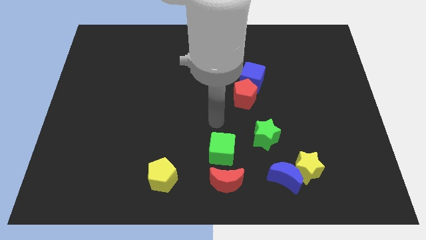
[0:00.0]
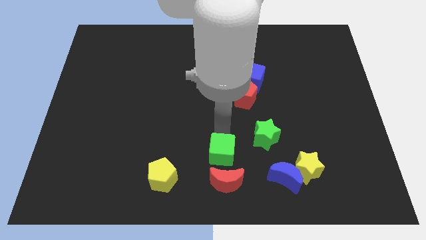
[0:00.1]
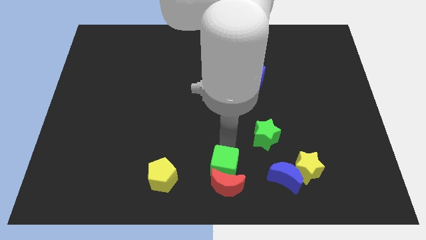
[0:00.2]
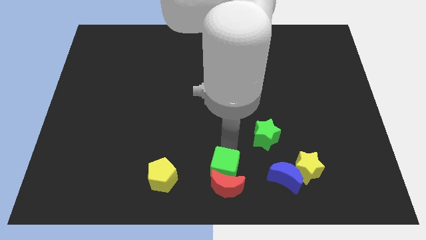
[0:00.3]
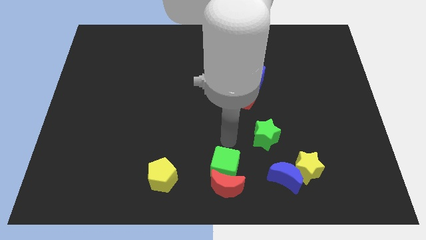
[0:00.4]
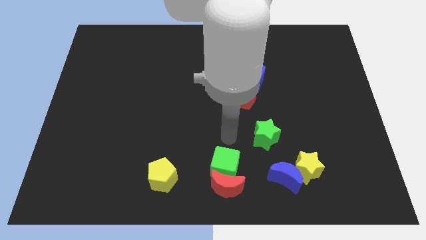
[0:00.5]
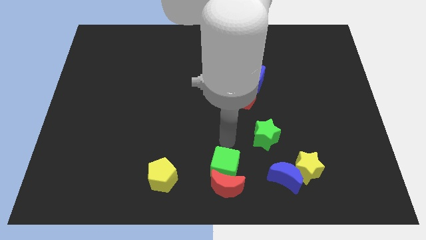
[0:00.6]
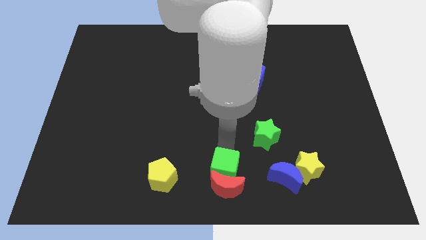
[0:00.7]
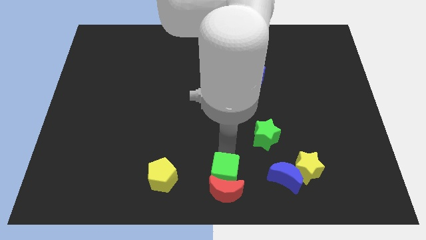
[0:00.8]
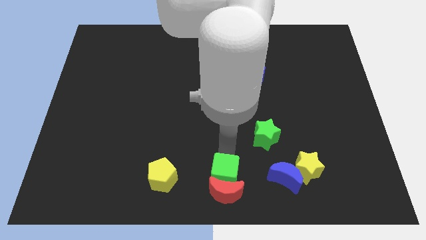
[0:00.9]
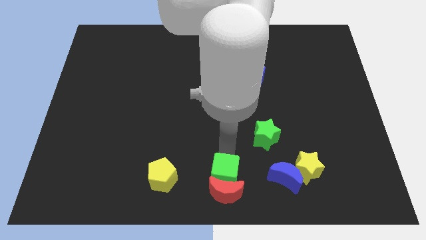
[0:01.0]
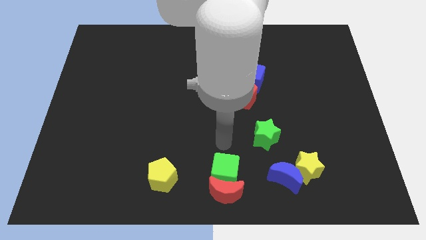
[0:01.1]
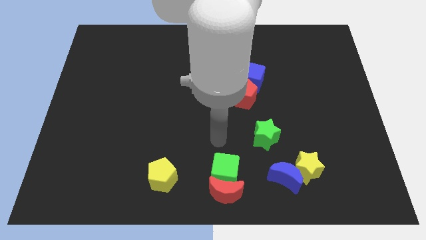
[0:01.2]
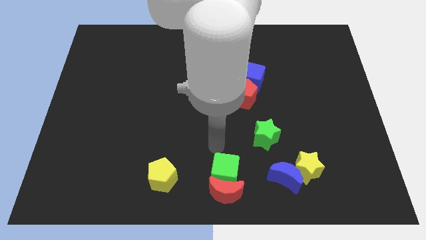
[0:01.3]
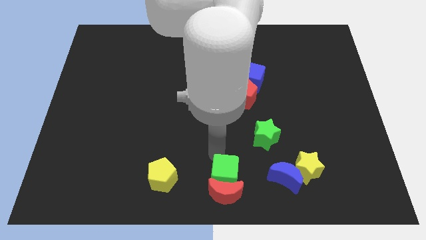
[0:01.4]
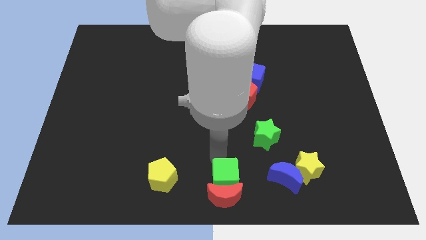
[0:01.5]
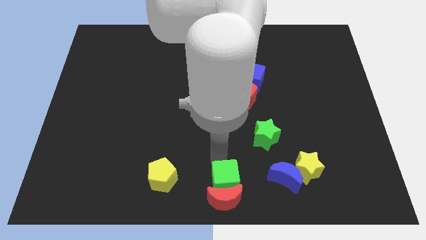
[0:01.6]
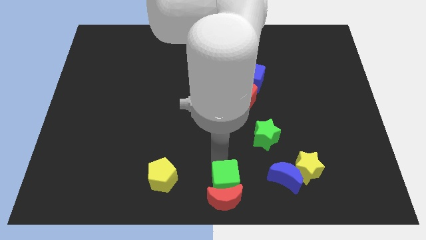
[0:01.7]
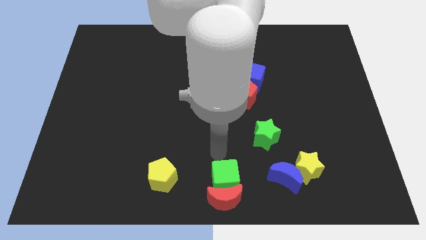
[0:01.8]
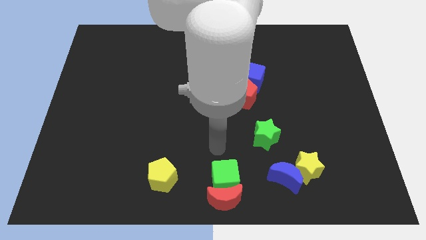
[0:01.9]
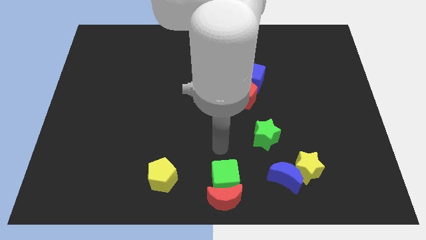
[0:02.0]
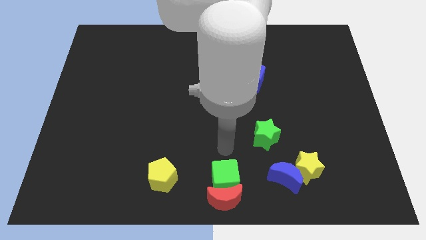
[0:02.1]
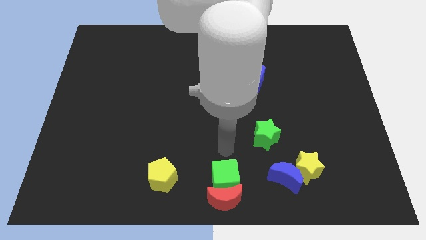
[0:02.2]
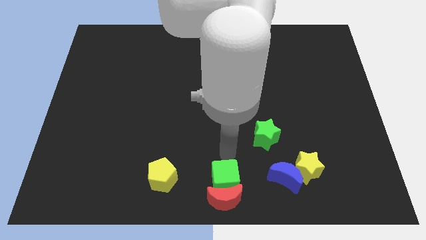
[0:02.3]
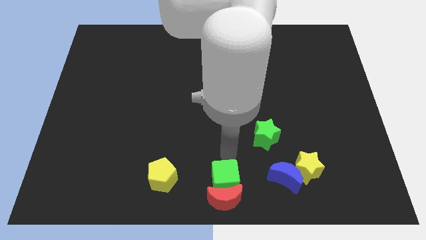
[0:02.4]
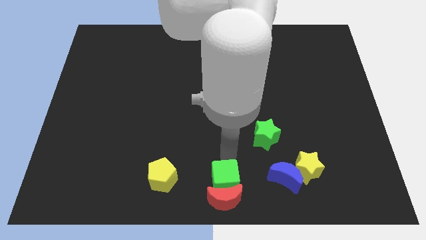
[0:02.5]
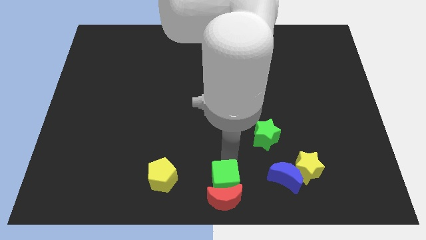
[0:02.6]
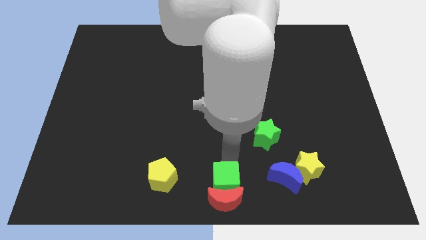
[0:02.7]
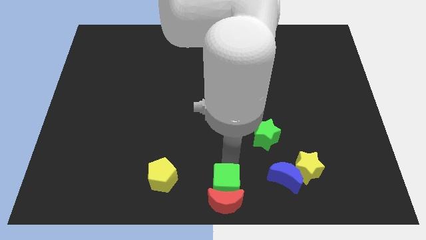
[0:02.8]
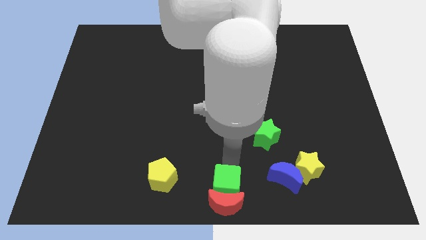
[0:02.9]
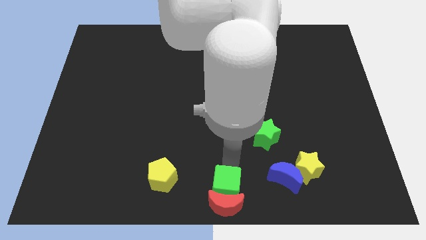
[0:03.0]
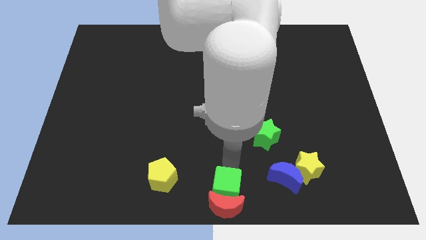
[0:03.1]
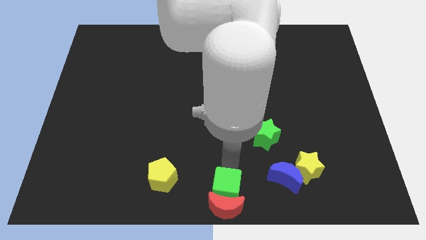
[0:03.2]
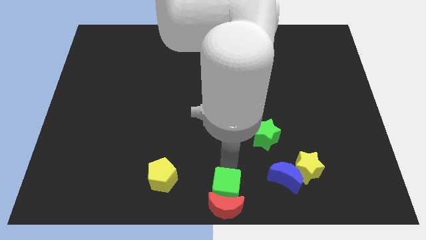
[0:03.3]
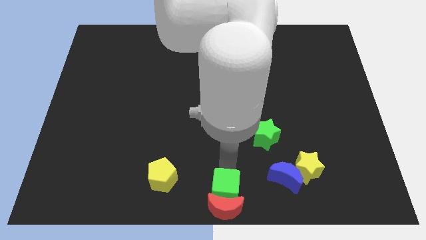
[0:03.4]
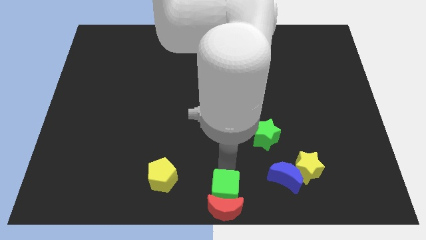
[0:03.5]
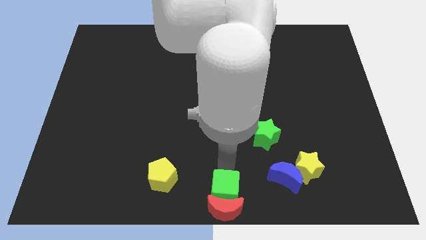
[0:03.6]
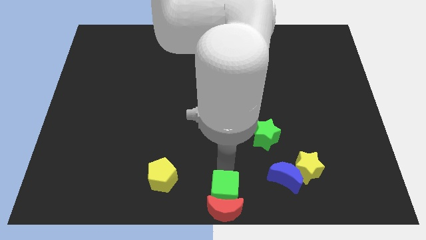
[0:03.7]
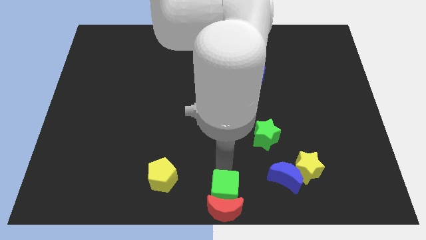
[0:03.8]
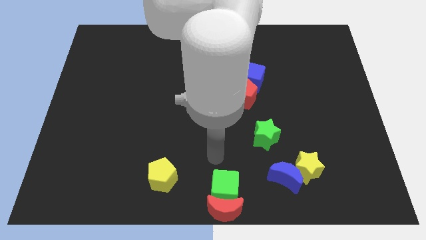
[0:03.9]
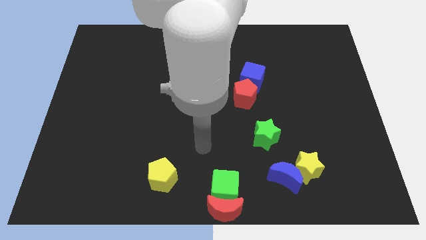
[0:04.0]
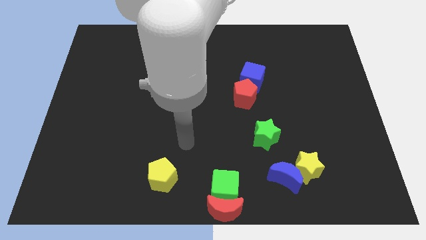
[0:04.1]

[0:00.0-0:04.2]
move the green cube and the red moon to the bottom center of the board

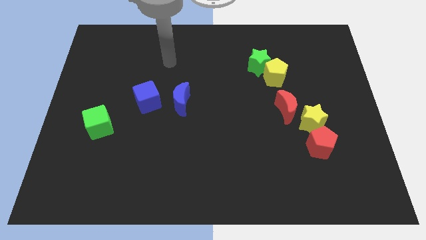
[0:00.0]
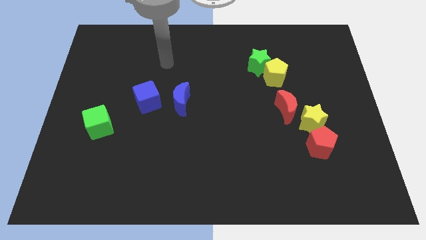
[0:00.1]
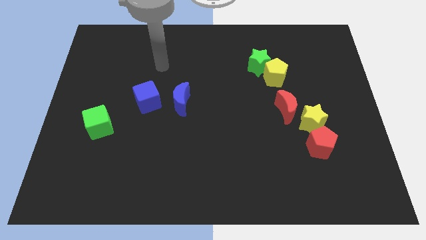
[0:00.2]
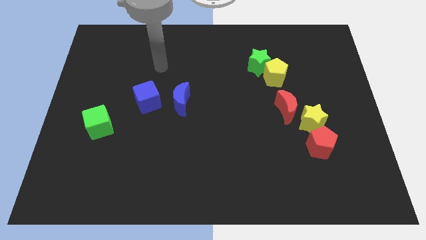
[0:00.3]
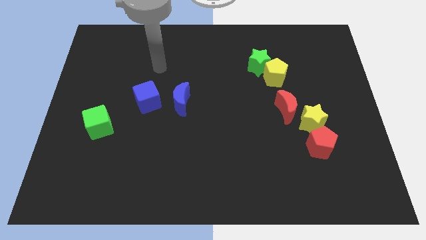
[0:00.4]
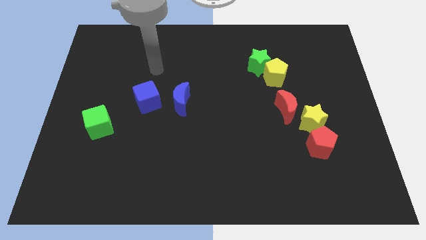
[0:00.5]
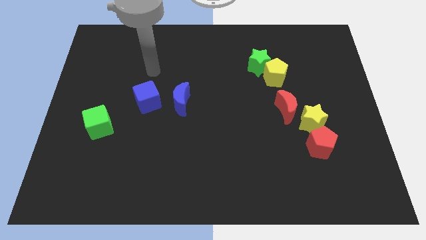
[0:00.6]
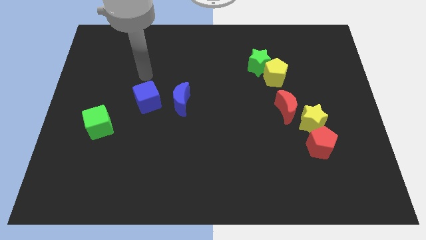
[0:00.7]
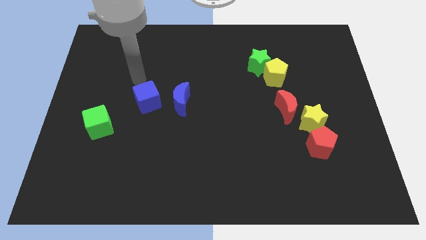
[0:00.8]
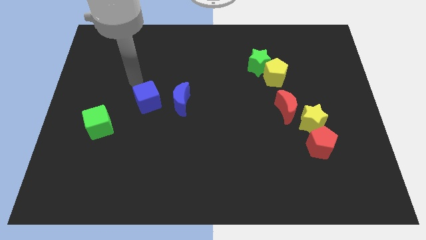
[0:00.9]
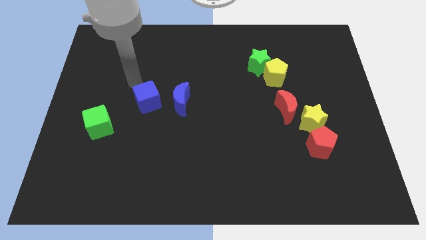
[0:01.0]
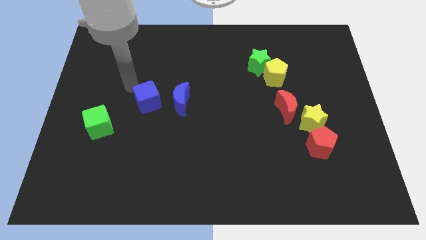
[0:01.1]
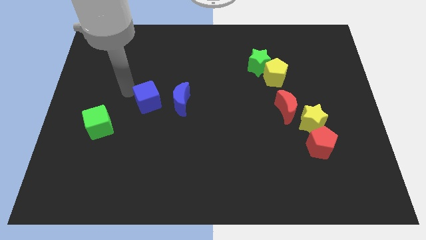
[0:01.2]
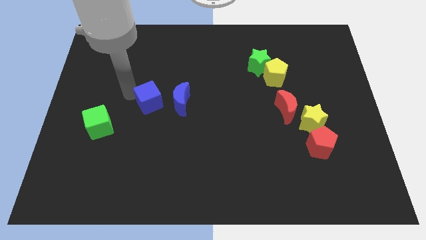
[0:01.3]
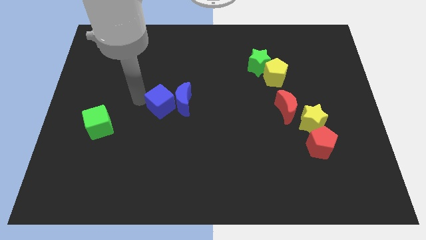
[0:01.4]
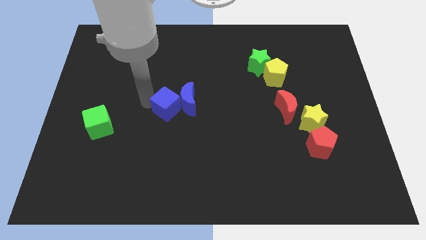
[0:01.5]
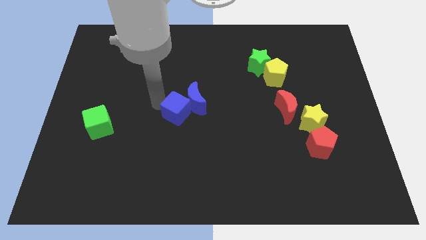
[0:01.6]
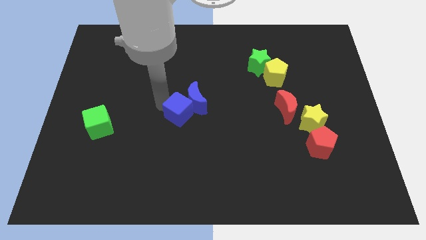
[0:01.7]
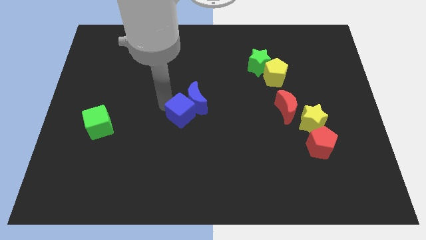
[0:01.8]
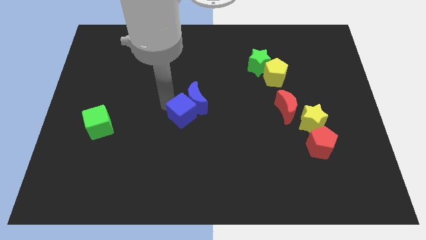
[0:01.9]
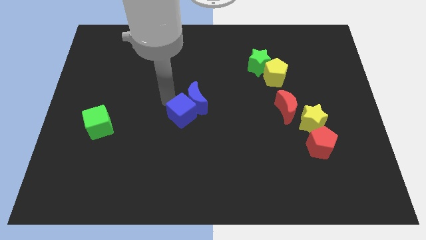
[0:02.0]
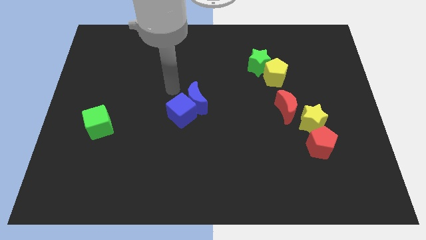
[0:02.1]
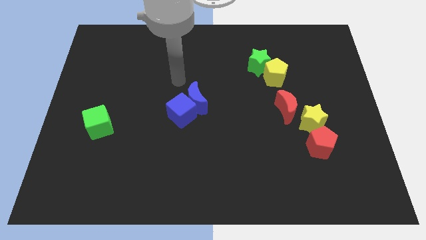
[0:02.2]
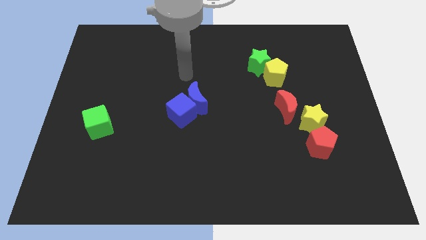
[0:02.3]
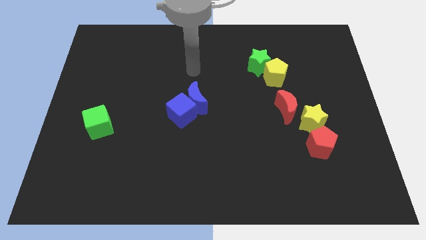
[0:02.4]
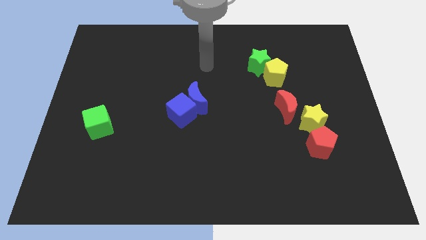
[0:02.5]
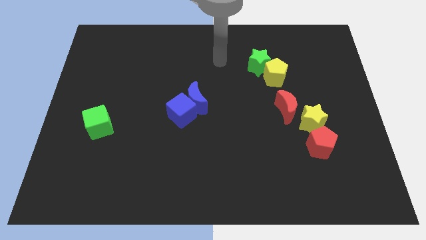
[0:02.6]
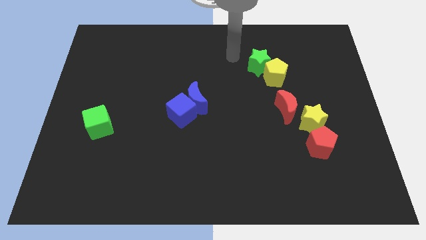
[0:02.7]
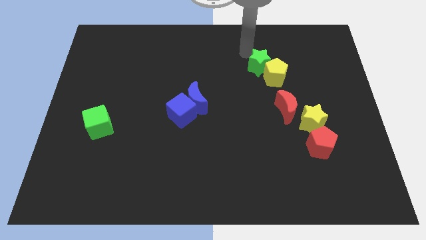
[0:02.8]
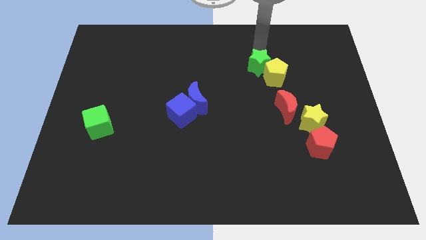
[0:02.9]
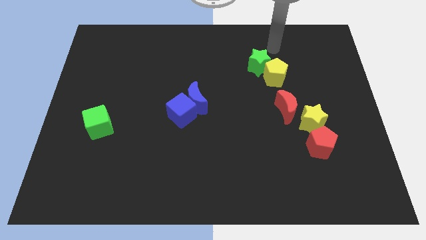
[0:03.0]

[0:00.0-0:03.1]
push blue cube into blue moon

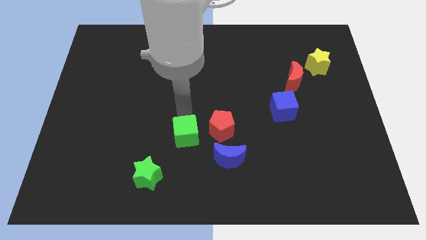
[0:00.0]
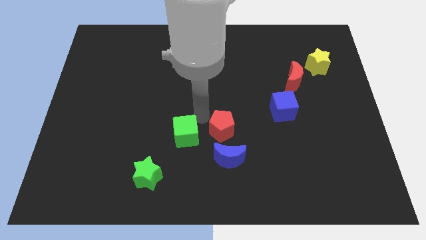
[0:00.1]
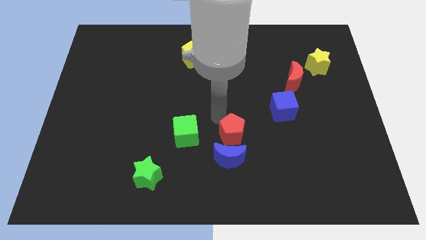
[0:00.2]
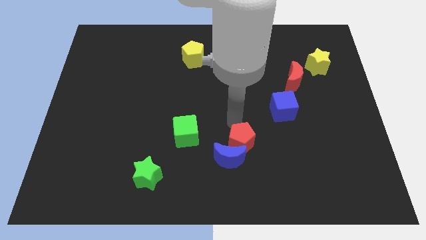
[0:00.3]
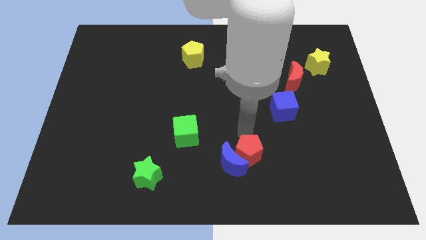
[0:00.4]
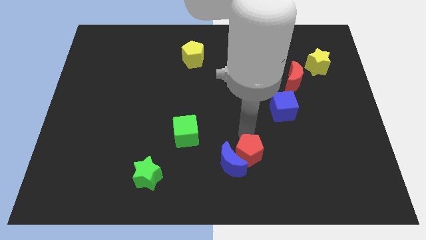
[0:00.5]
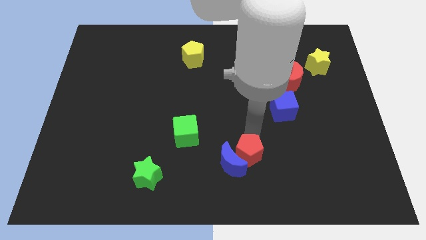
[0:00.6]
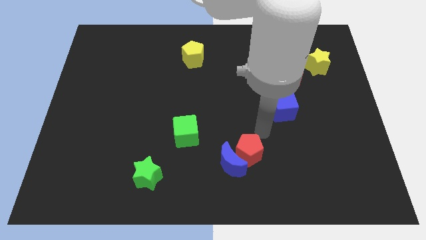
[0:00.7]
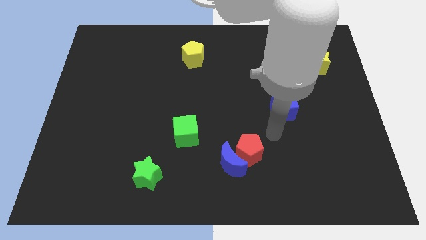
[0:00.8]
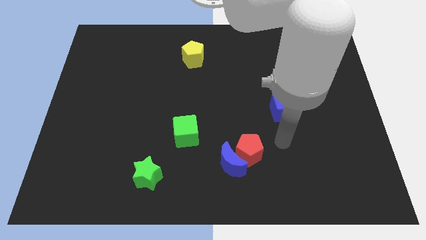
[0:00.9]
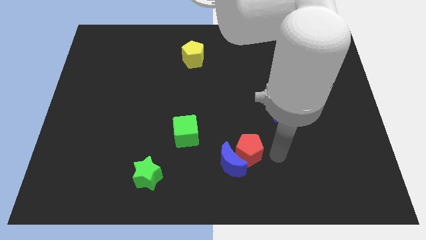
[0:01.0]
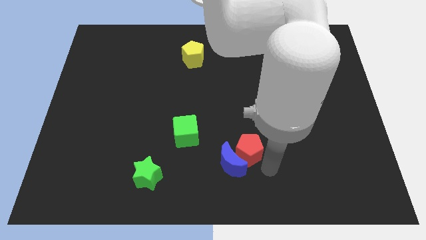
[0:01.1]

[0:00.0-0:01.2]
push the red pentagon to the right of the blue crescent

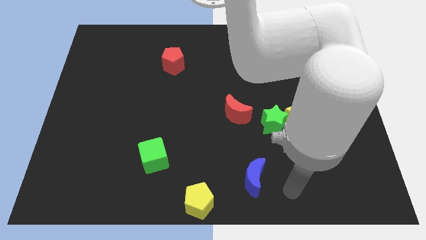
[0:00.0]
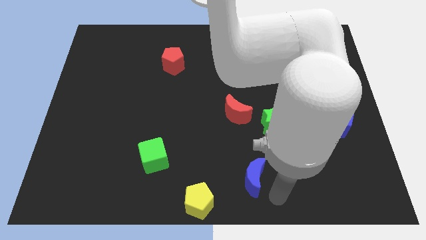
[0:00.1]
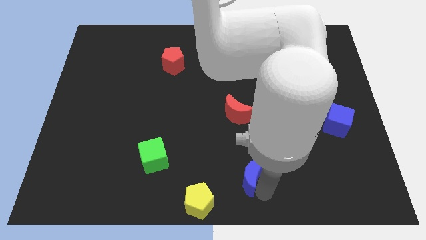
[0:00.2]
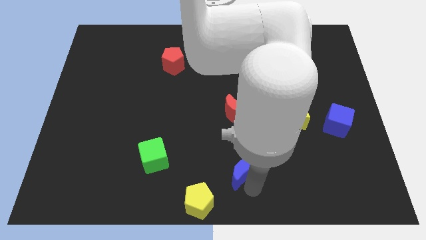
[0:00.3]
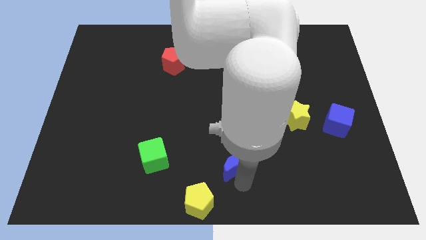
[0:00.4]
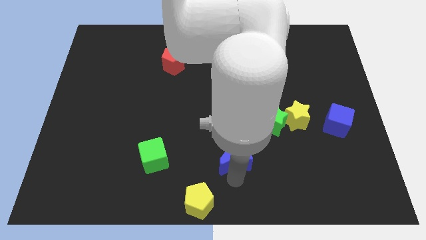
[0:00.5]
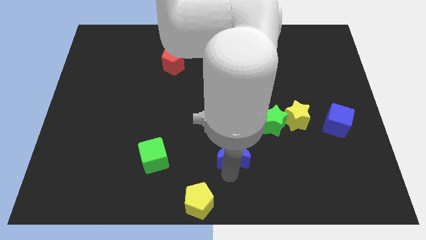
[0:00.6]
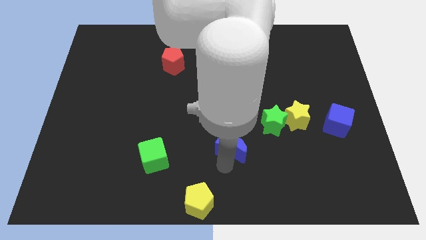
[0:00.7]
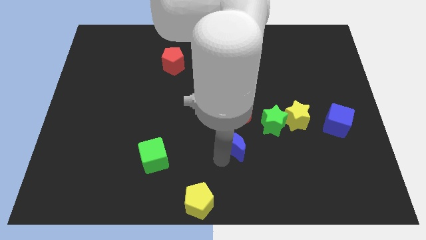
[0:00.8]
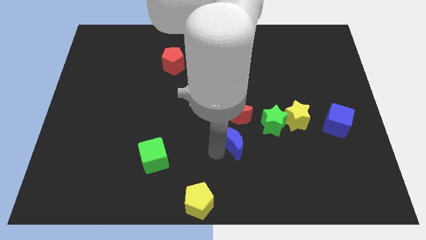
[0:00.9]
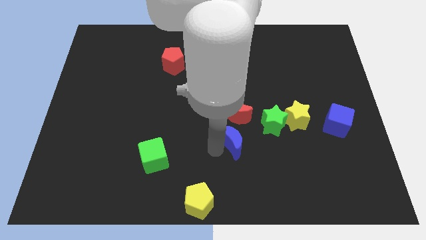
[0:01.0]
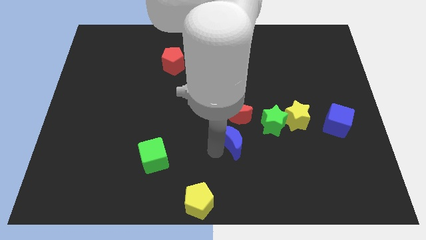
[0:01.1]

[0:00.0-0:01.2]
push the blue crescent to the top
